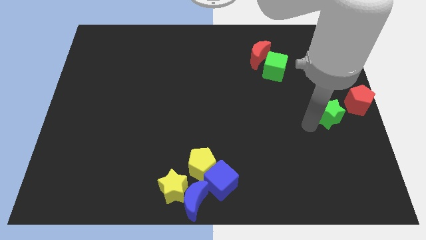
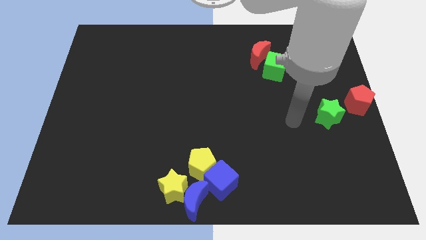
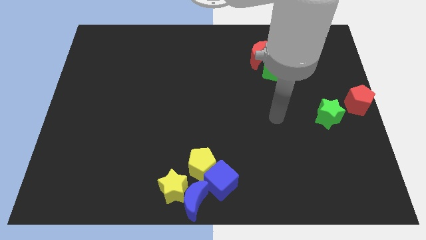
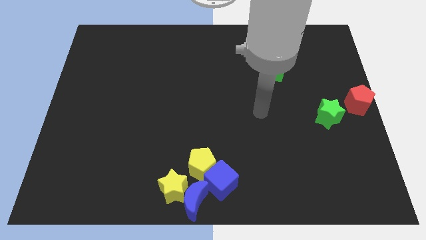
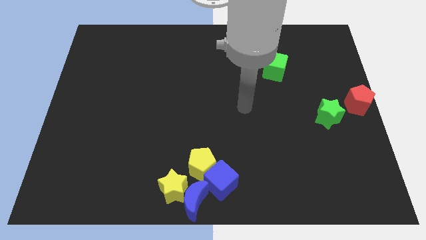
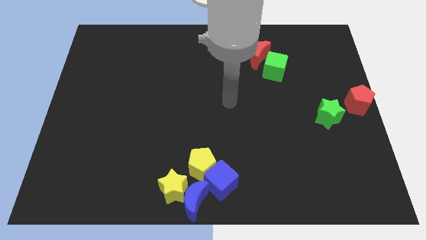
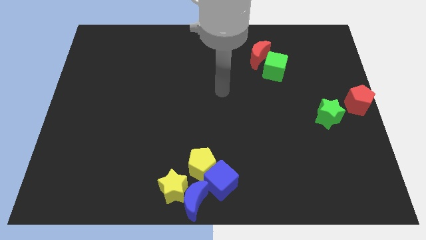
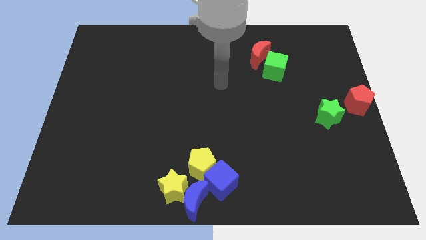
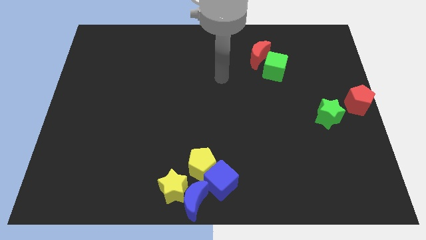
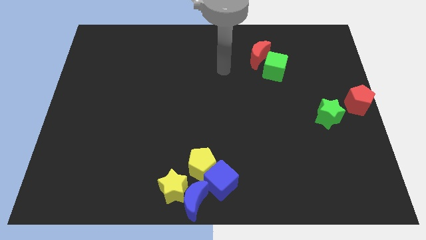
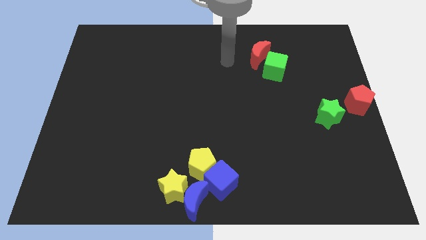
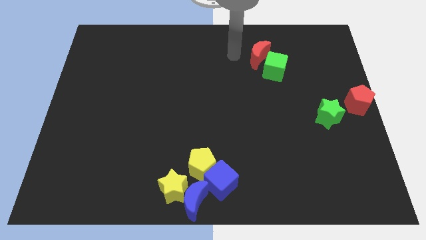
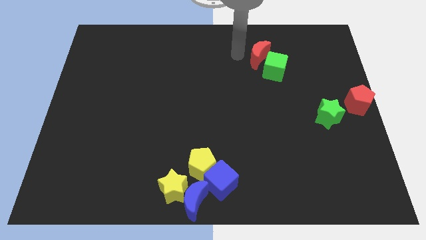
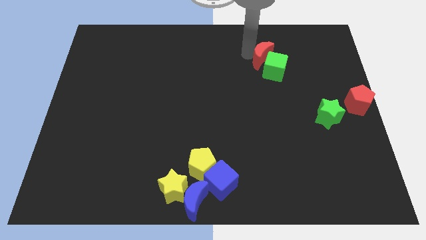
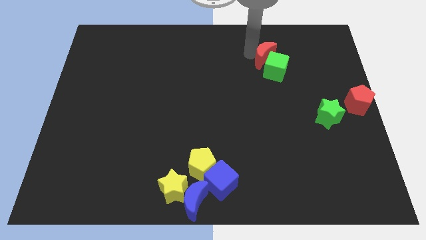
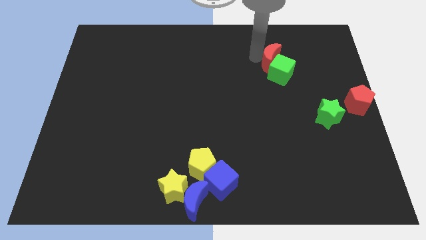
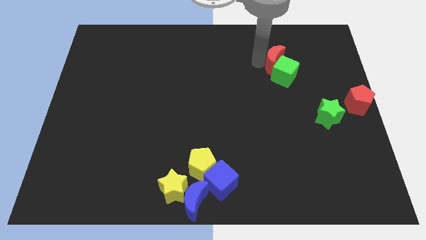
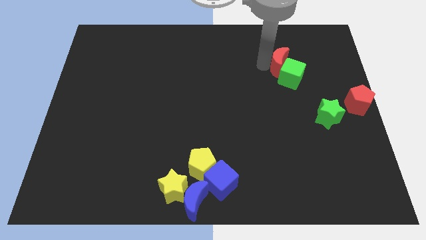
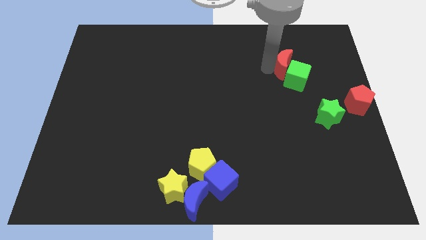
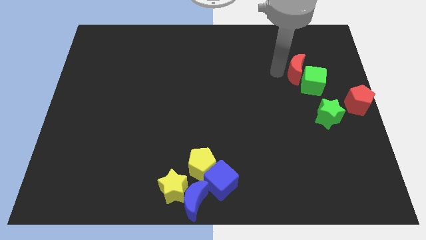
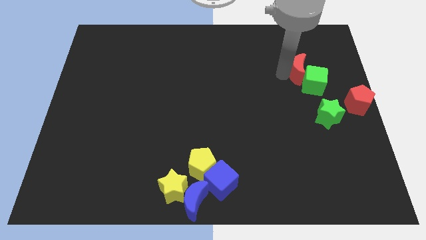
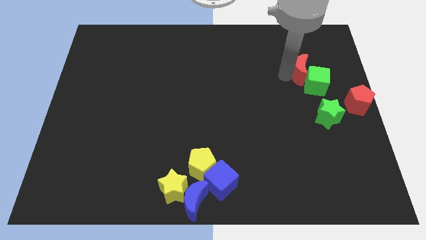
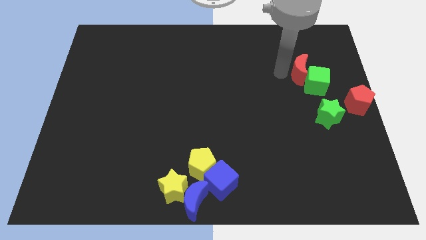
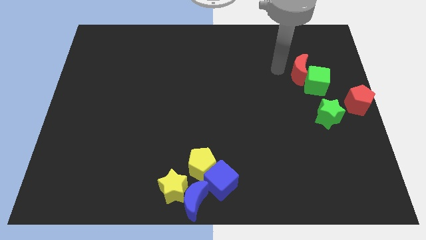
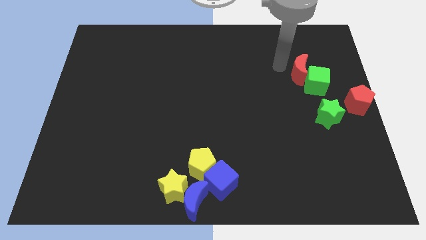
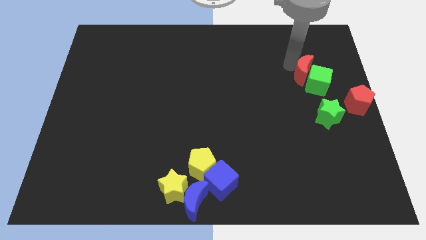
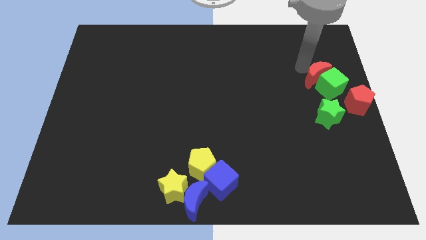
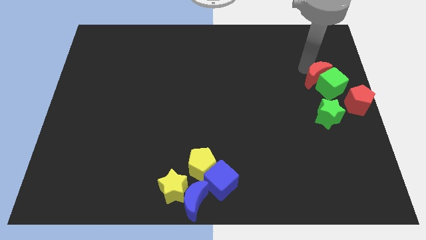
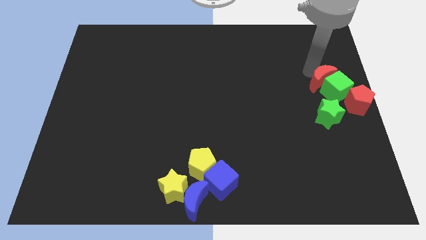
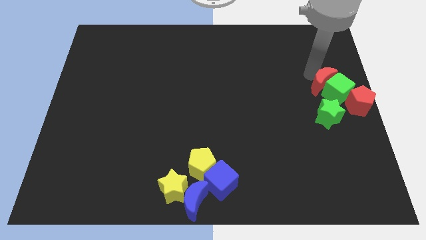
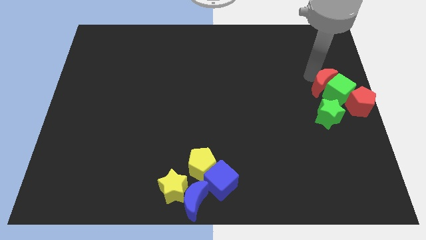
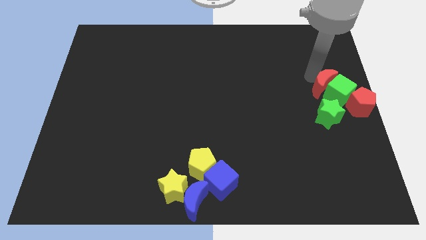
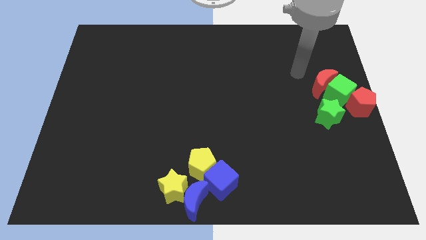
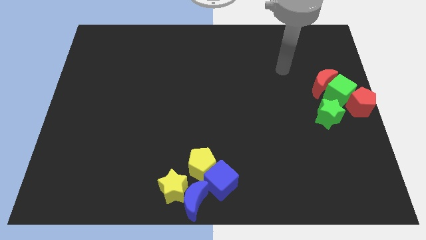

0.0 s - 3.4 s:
move red crescent and green cube to the right center of the board

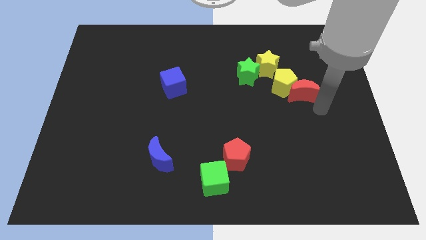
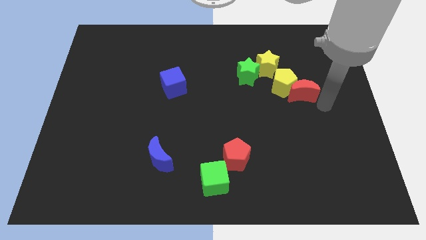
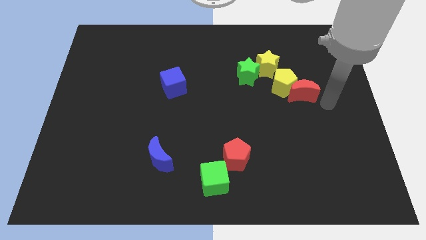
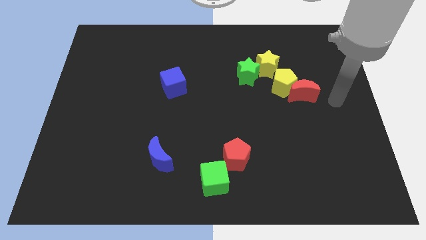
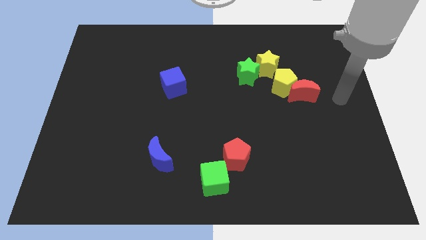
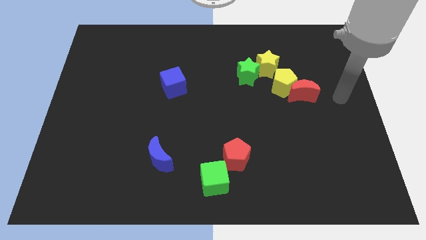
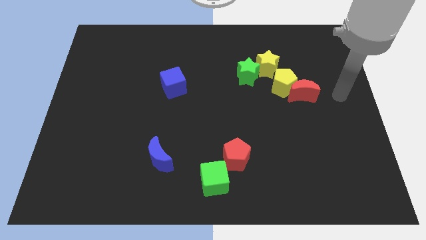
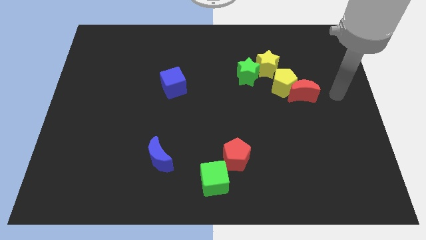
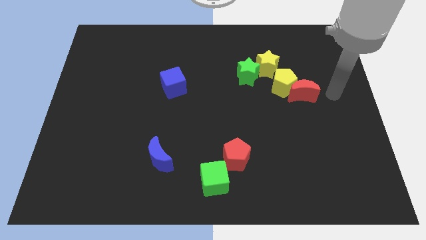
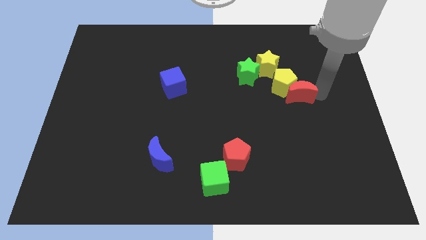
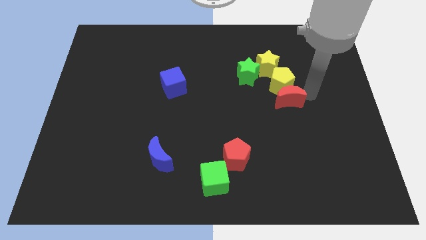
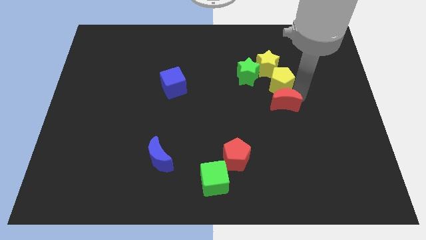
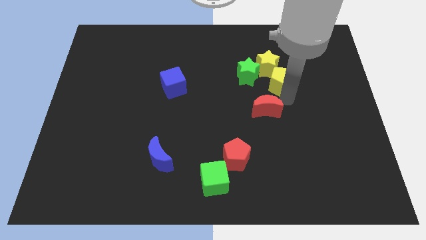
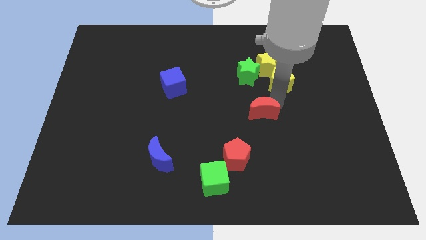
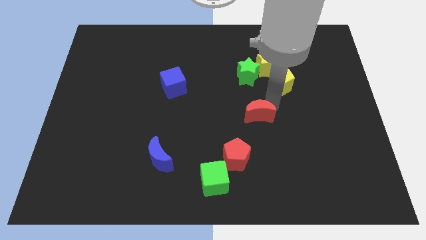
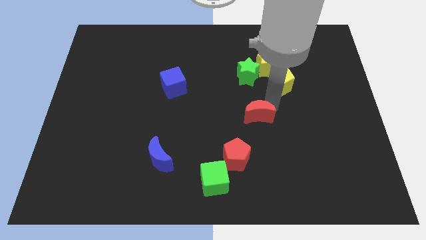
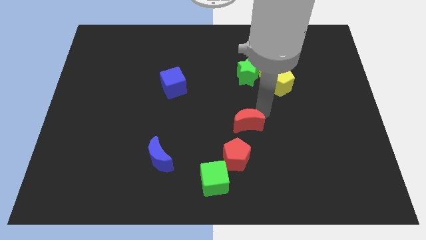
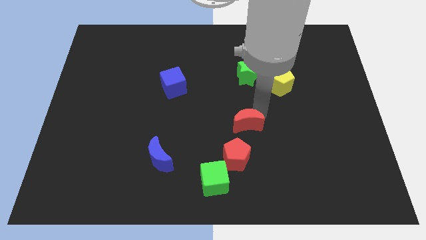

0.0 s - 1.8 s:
place the red crescent above the red pentagon

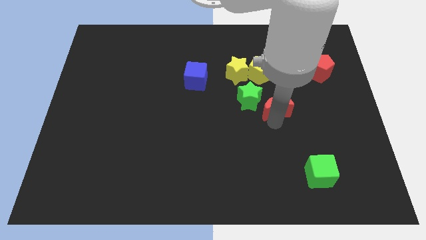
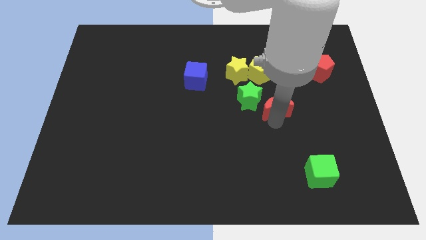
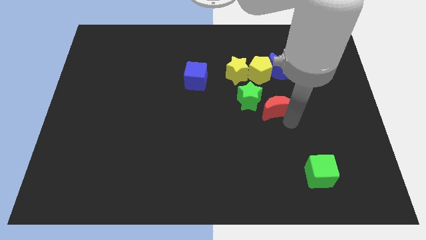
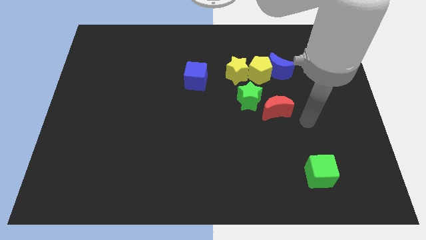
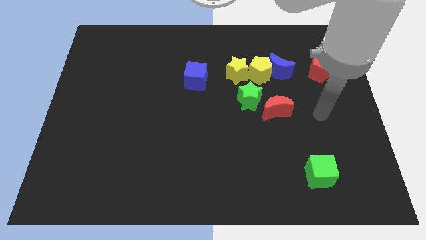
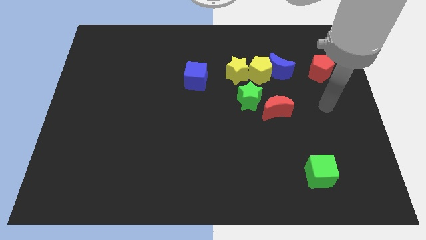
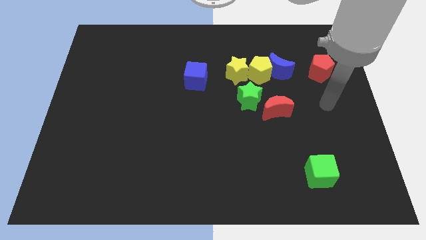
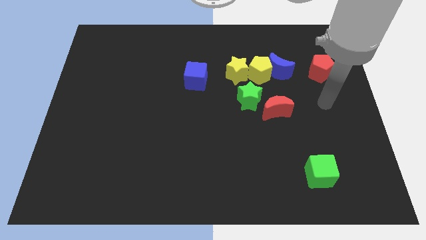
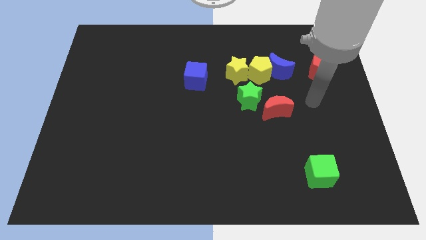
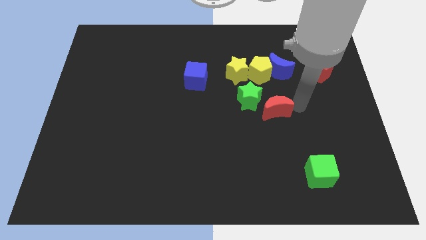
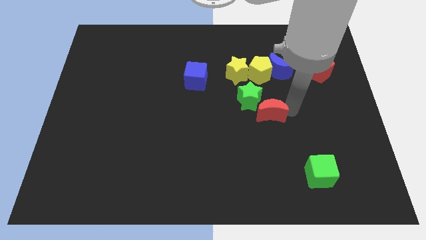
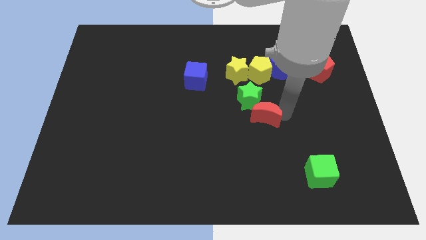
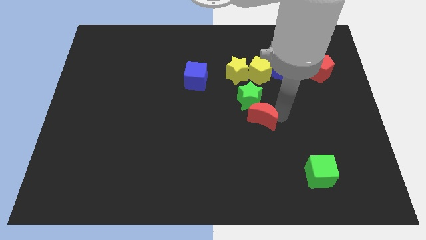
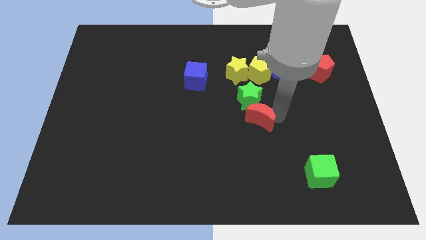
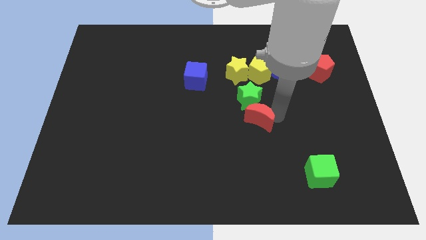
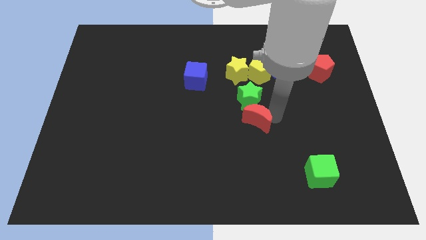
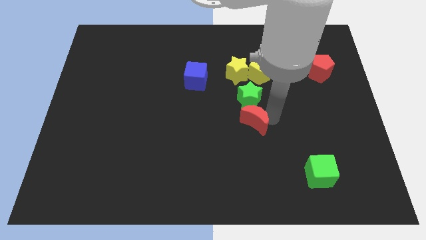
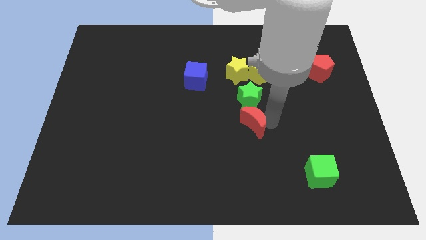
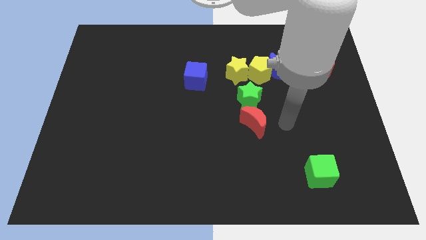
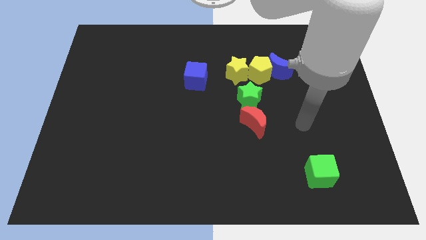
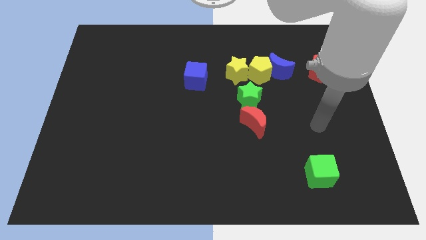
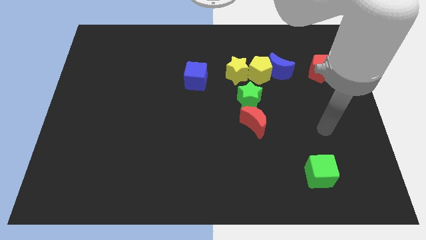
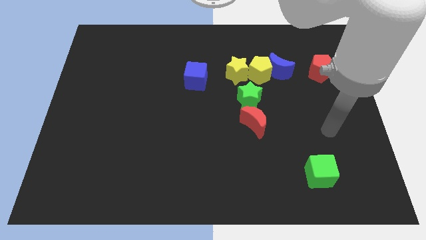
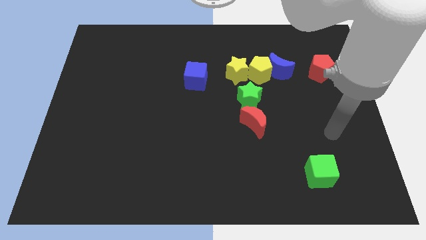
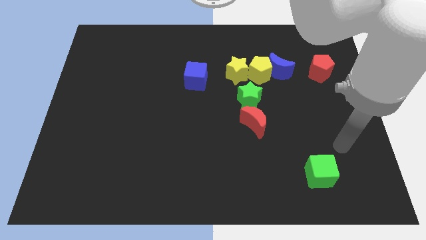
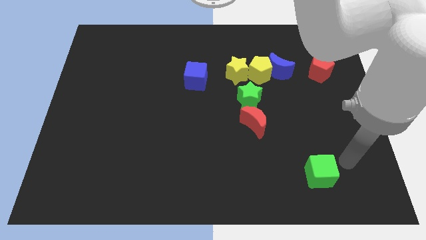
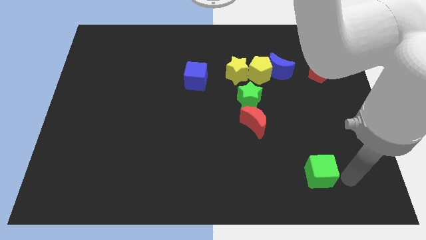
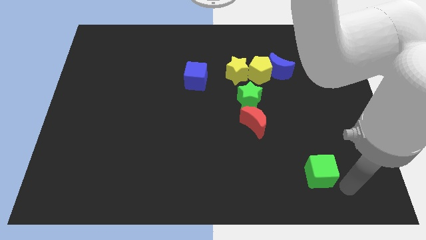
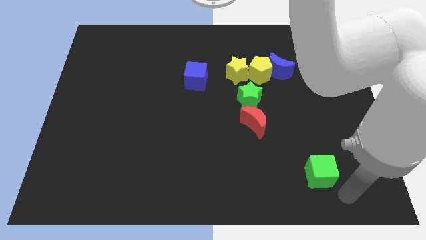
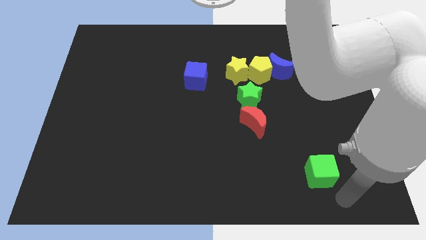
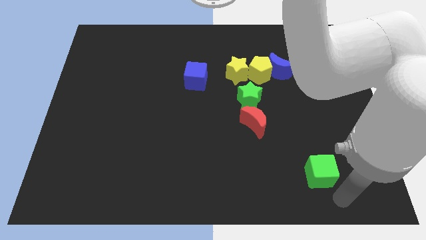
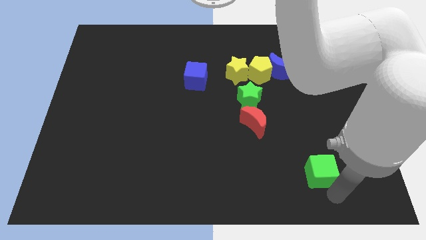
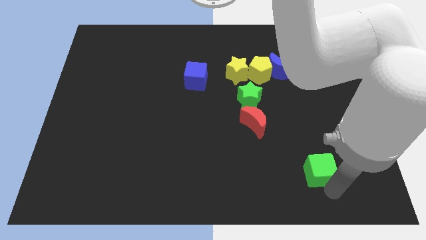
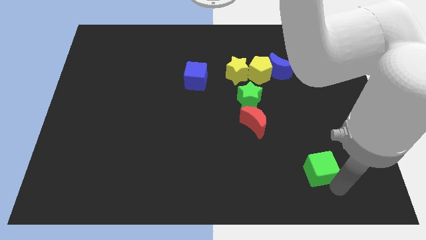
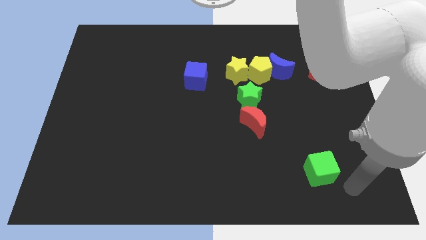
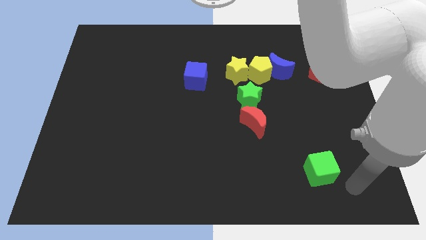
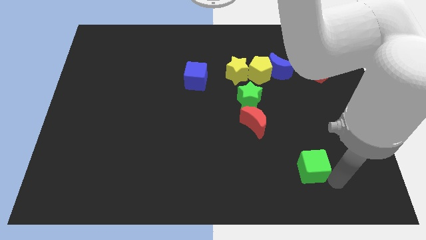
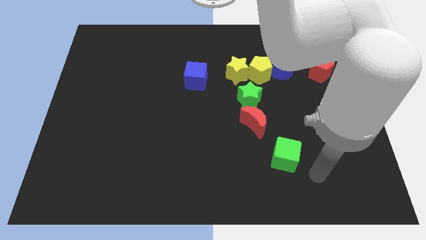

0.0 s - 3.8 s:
drag the green cube vertically at the bottom of the blue moon
